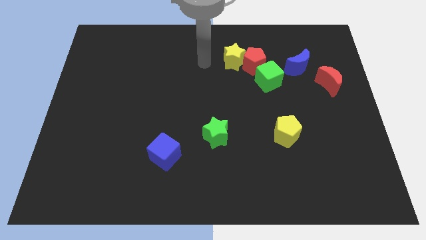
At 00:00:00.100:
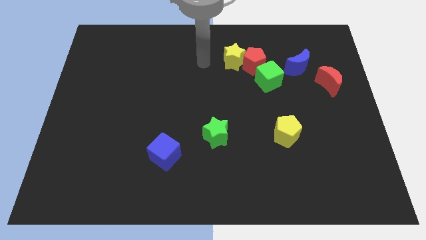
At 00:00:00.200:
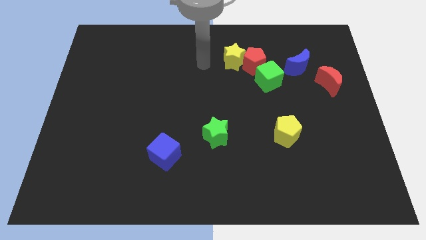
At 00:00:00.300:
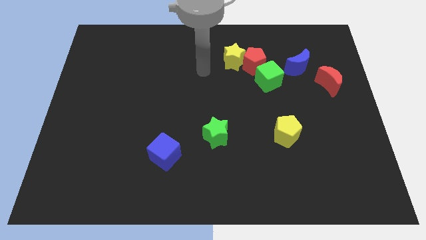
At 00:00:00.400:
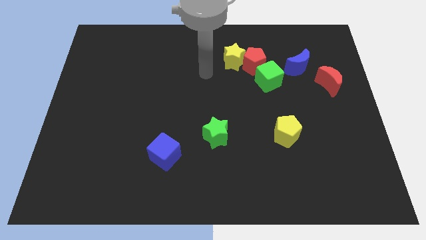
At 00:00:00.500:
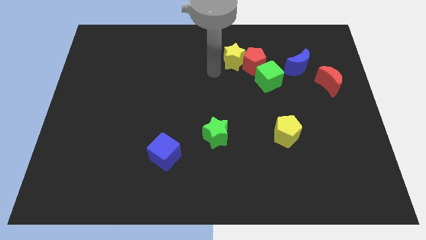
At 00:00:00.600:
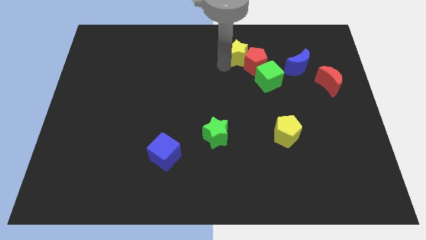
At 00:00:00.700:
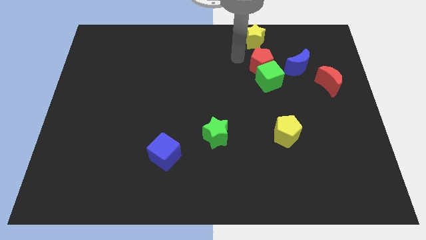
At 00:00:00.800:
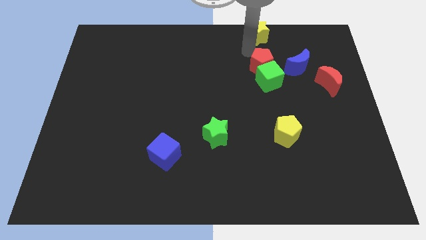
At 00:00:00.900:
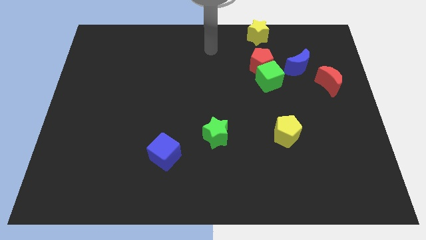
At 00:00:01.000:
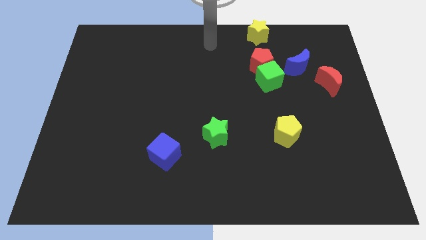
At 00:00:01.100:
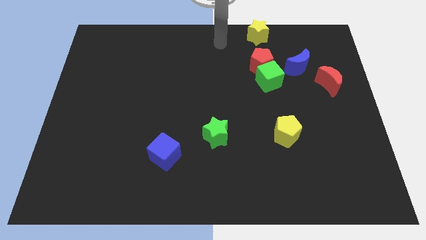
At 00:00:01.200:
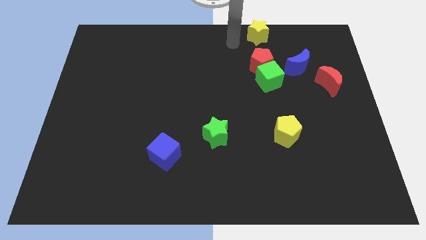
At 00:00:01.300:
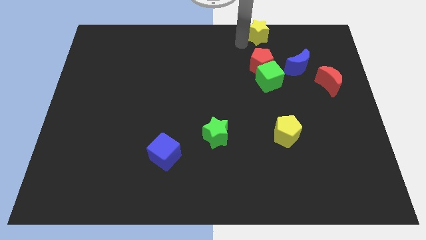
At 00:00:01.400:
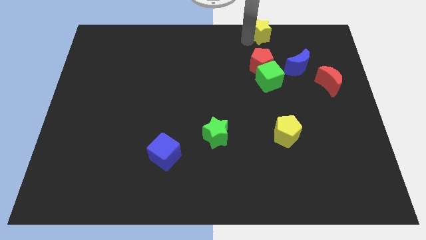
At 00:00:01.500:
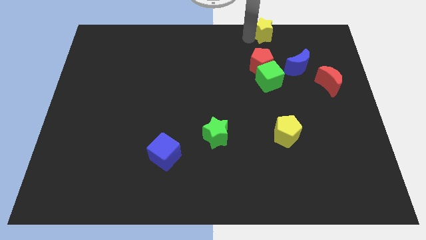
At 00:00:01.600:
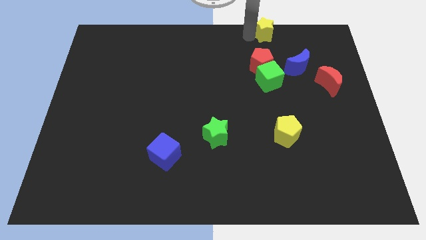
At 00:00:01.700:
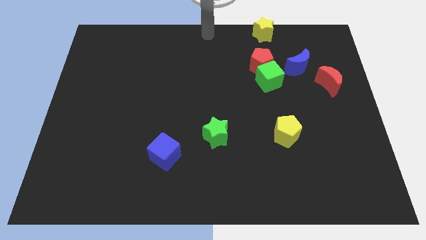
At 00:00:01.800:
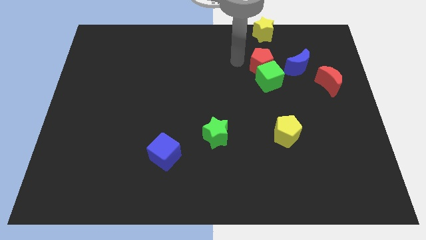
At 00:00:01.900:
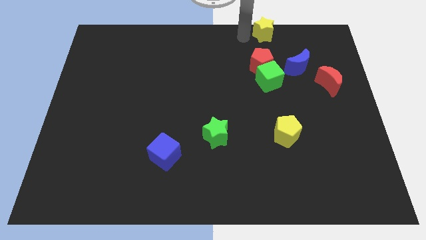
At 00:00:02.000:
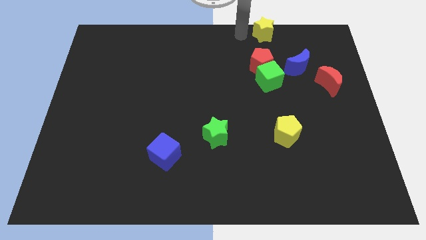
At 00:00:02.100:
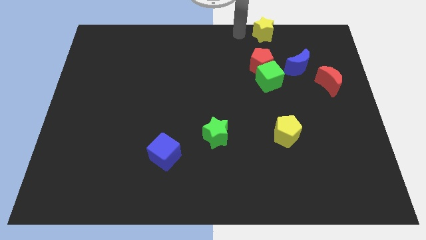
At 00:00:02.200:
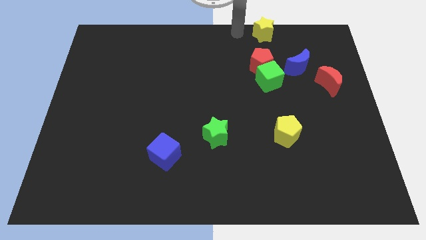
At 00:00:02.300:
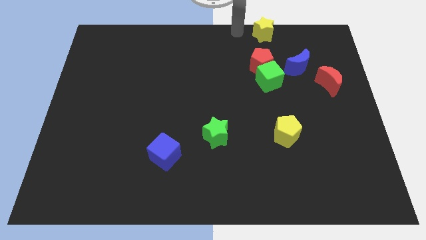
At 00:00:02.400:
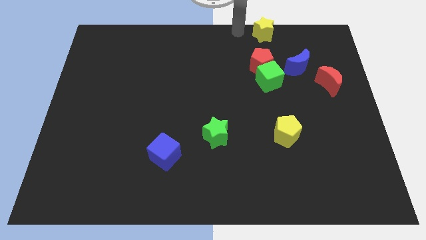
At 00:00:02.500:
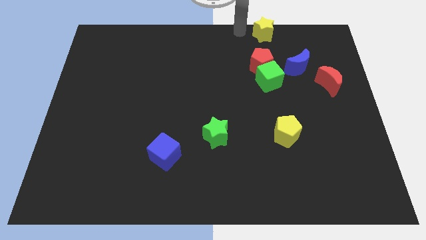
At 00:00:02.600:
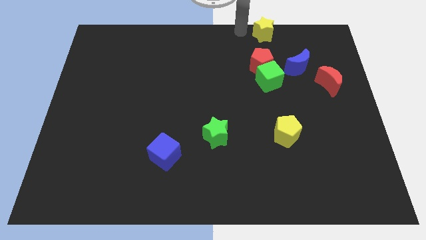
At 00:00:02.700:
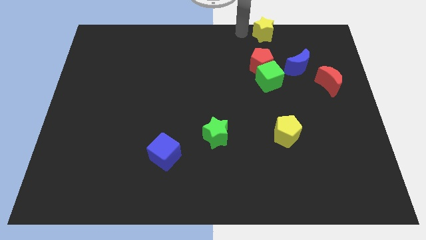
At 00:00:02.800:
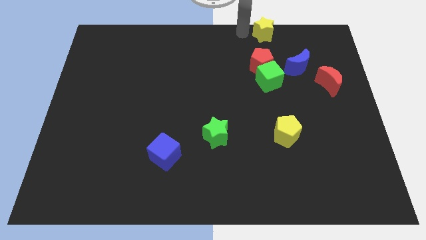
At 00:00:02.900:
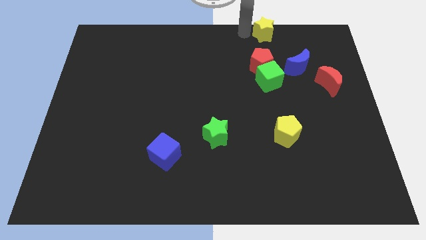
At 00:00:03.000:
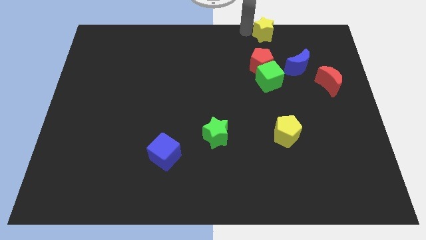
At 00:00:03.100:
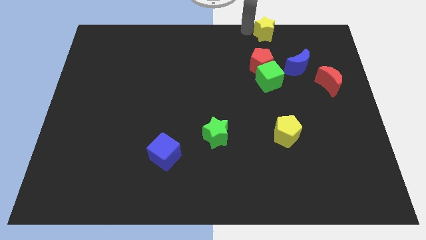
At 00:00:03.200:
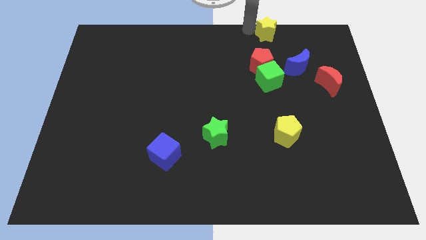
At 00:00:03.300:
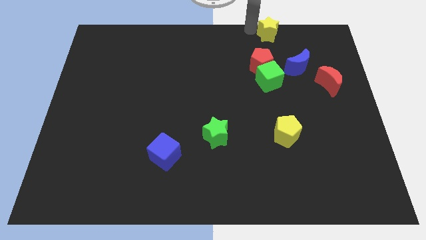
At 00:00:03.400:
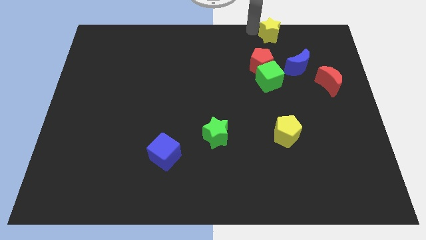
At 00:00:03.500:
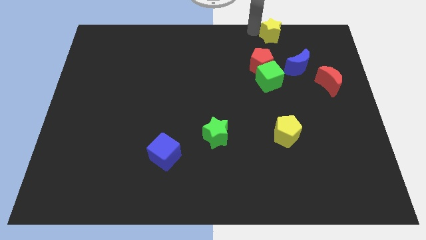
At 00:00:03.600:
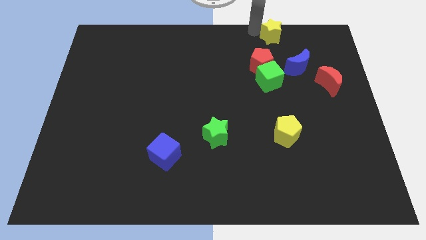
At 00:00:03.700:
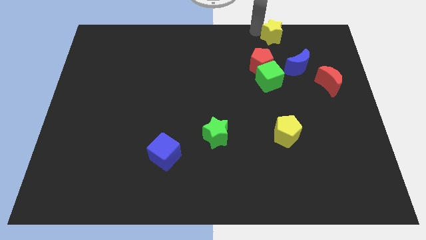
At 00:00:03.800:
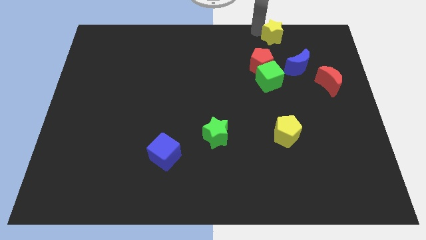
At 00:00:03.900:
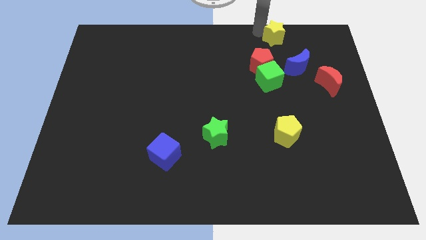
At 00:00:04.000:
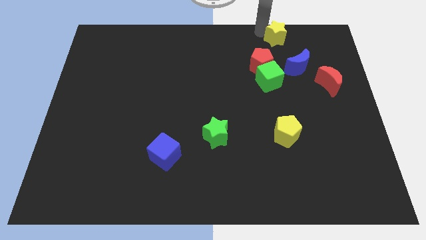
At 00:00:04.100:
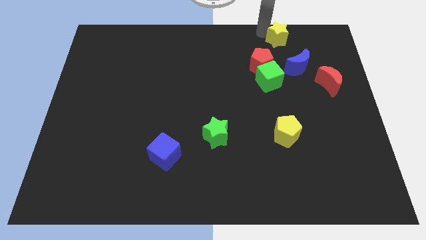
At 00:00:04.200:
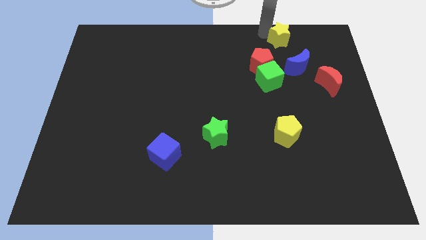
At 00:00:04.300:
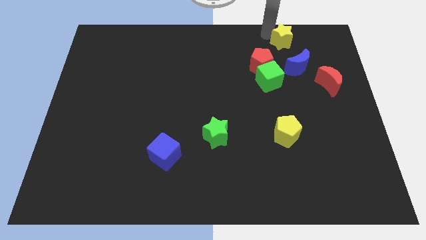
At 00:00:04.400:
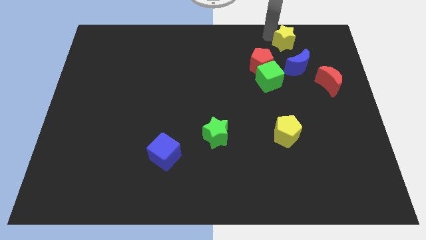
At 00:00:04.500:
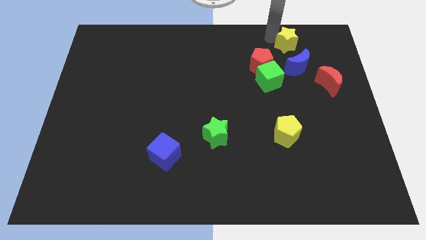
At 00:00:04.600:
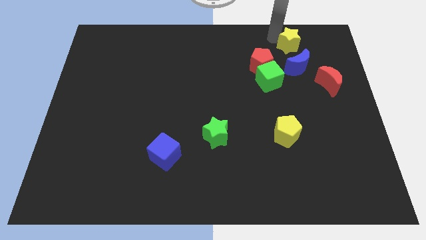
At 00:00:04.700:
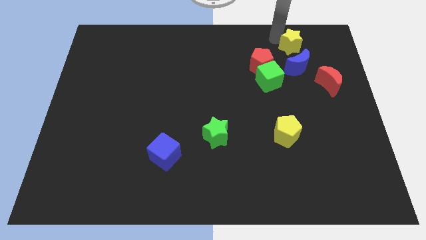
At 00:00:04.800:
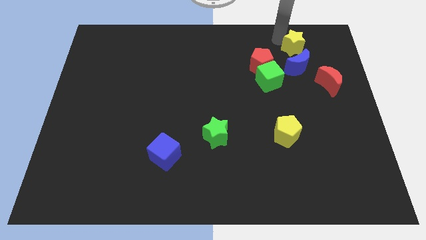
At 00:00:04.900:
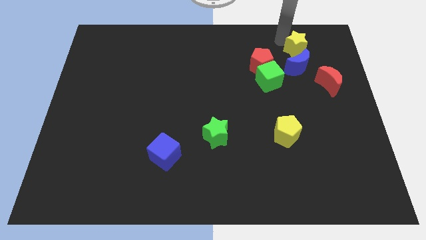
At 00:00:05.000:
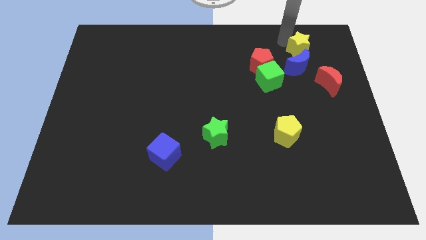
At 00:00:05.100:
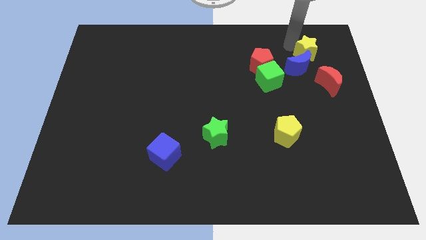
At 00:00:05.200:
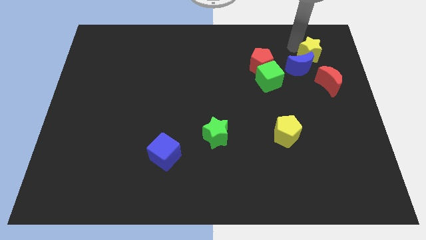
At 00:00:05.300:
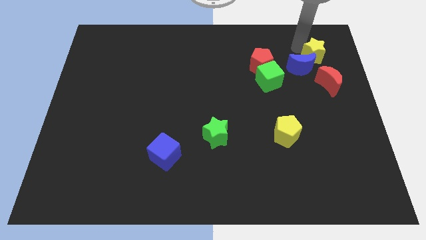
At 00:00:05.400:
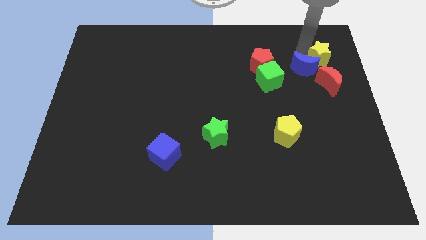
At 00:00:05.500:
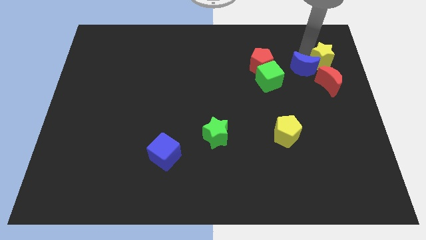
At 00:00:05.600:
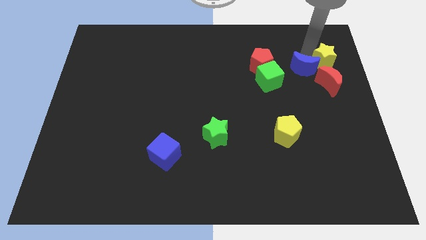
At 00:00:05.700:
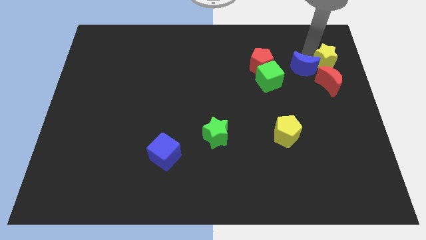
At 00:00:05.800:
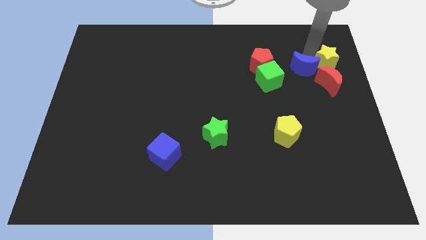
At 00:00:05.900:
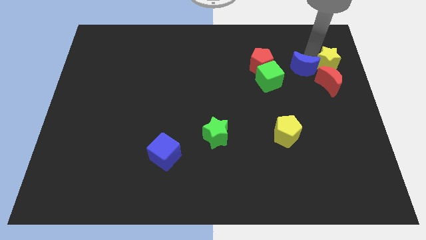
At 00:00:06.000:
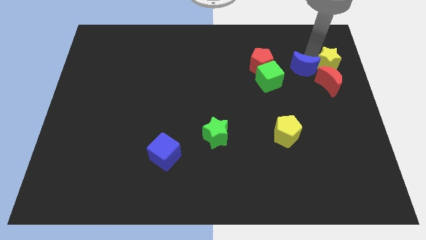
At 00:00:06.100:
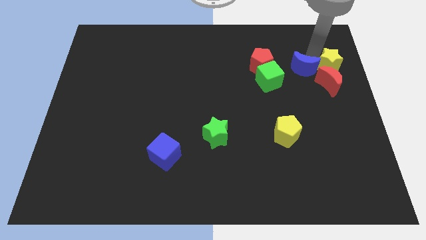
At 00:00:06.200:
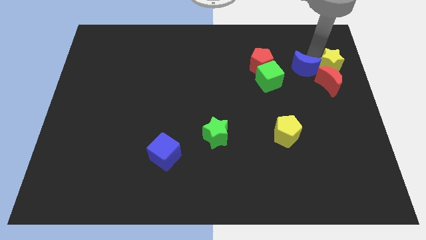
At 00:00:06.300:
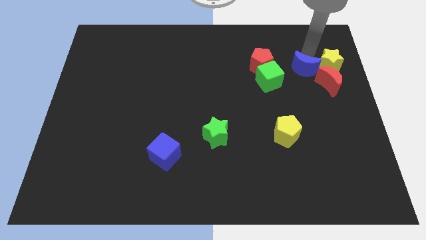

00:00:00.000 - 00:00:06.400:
move the yellow star to the red moon

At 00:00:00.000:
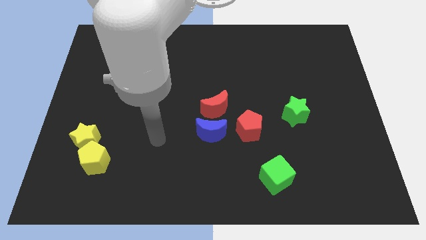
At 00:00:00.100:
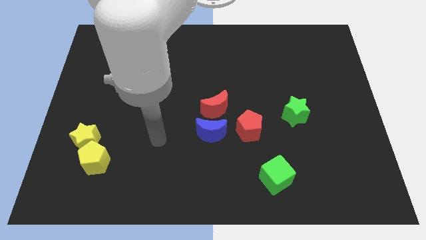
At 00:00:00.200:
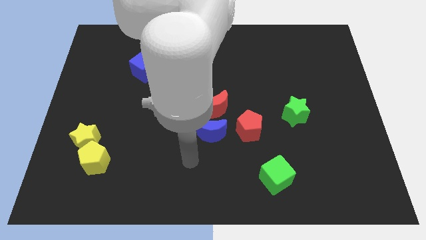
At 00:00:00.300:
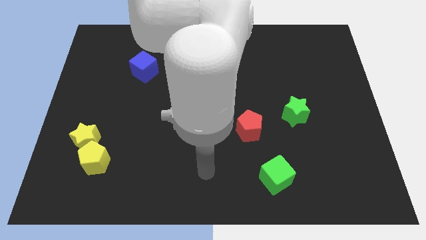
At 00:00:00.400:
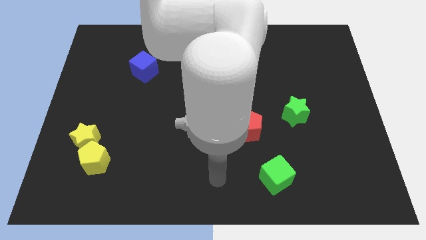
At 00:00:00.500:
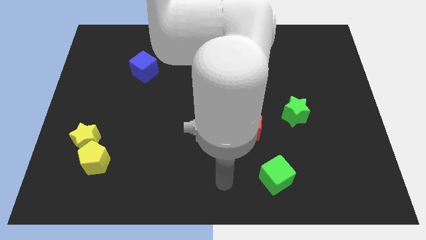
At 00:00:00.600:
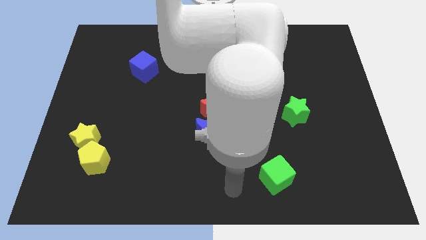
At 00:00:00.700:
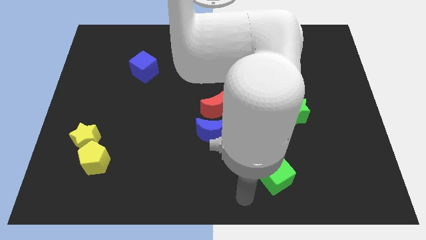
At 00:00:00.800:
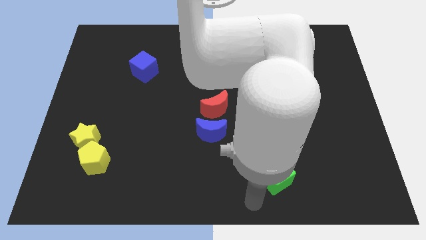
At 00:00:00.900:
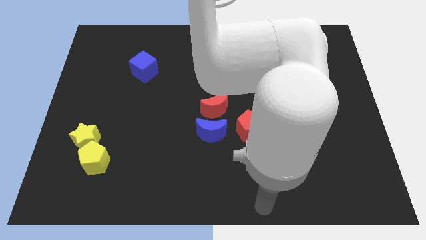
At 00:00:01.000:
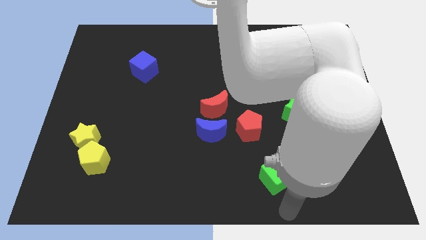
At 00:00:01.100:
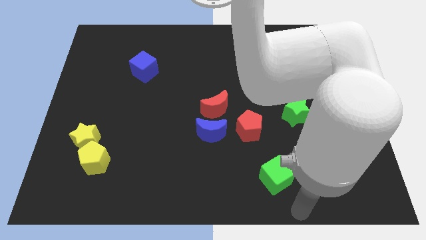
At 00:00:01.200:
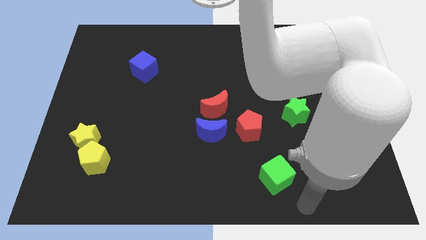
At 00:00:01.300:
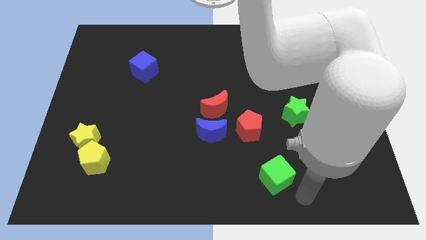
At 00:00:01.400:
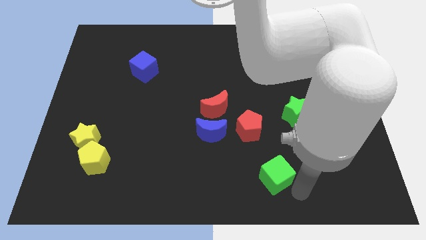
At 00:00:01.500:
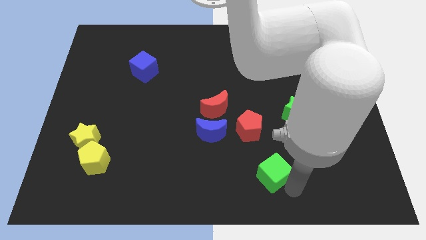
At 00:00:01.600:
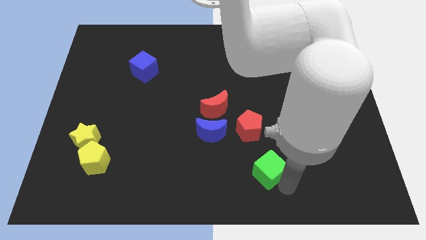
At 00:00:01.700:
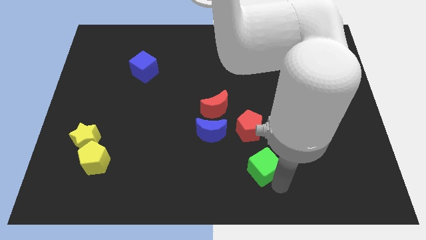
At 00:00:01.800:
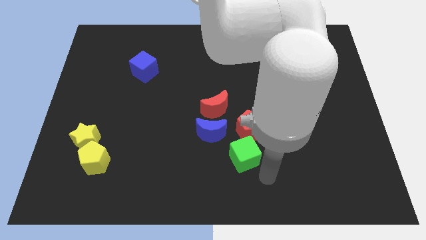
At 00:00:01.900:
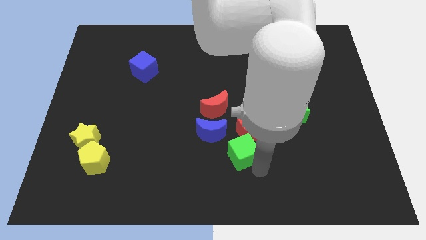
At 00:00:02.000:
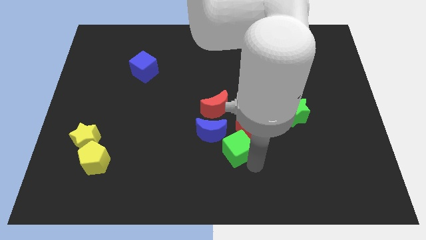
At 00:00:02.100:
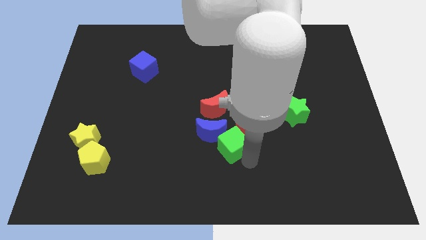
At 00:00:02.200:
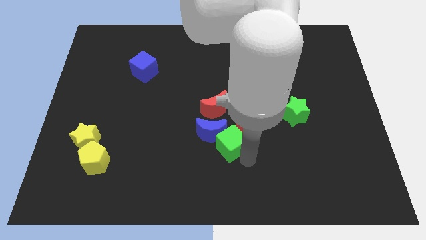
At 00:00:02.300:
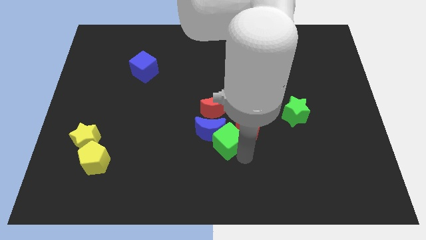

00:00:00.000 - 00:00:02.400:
move the green cube to the blue moon
